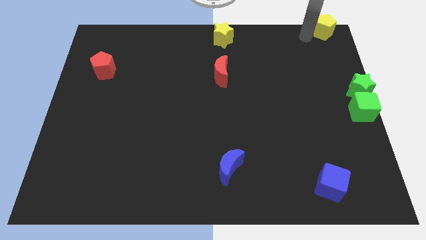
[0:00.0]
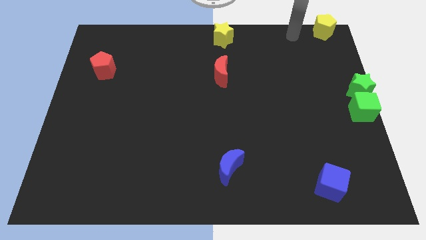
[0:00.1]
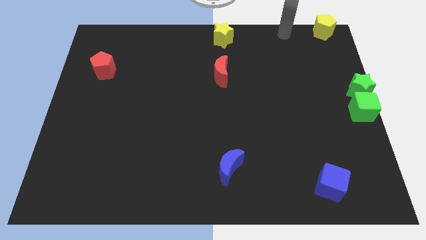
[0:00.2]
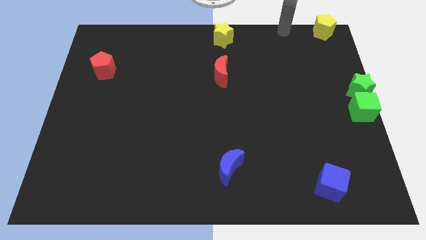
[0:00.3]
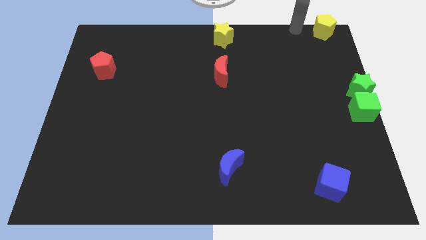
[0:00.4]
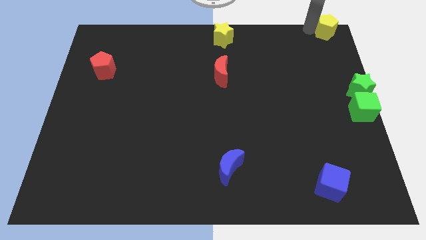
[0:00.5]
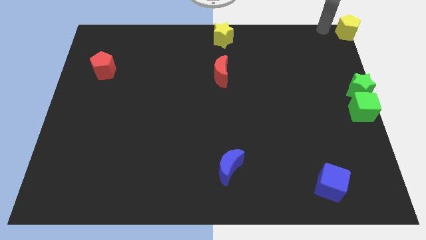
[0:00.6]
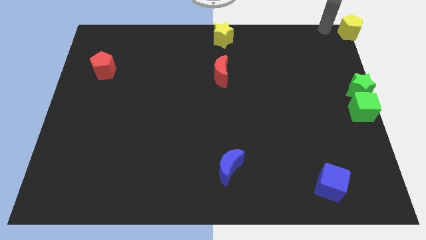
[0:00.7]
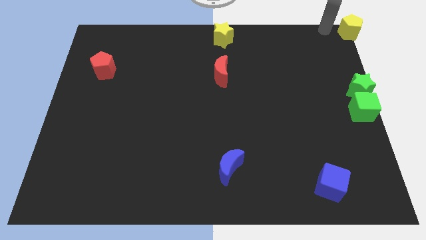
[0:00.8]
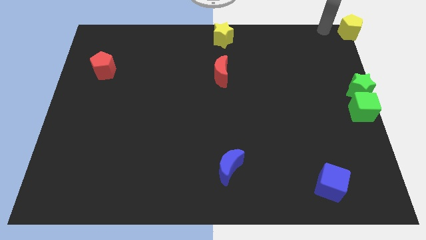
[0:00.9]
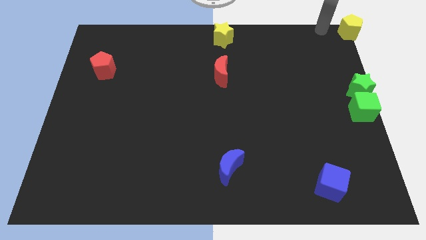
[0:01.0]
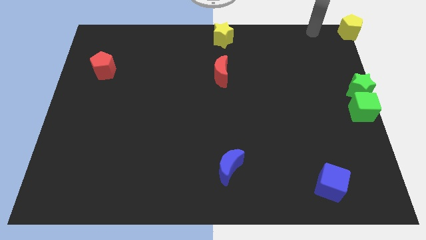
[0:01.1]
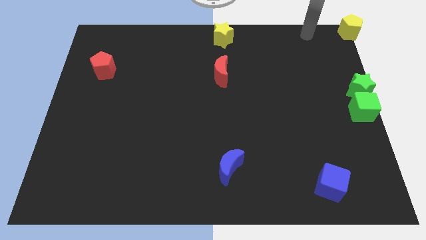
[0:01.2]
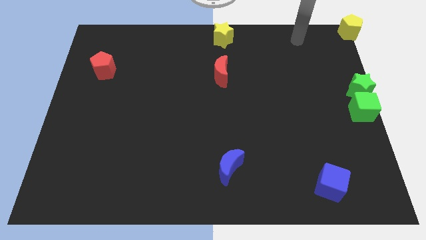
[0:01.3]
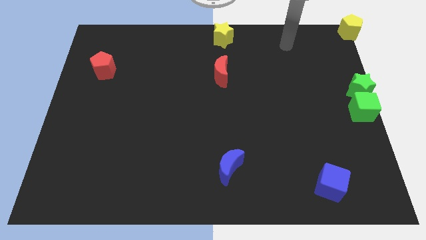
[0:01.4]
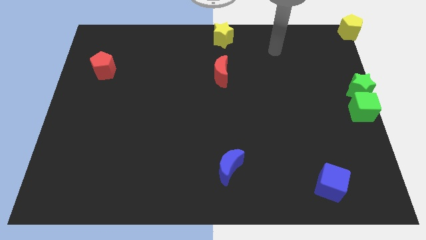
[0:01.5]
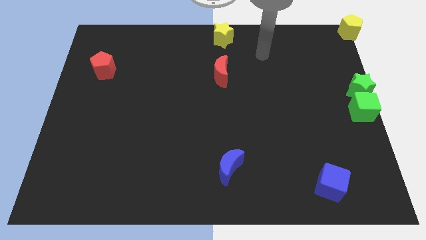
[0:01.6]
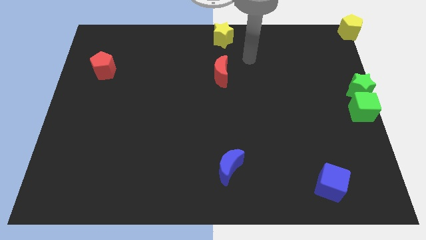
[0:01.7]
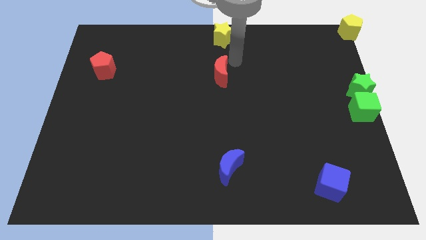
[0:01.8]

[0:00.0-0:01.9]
move yellow pentagon to the top right corner of board

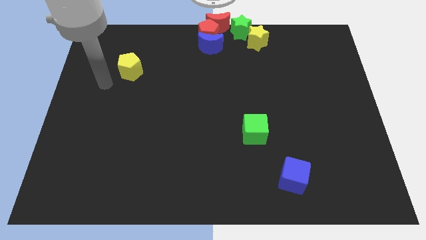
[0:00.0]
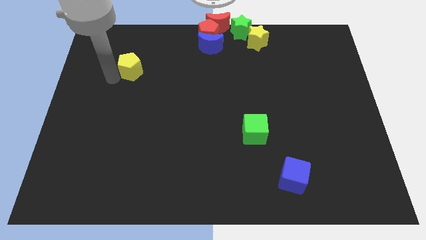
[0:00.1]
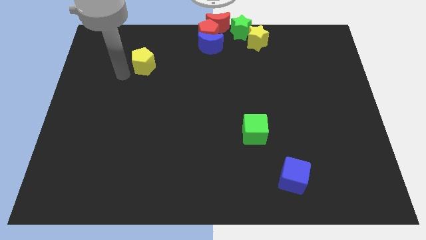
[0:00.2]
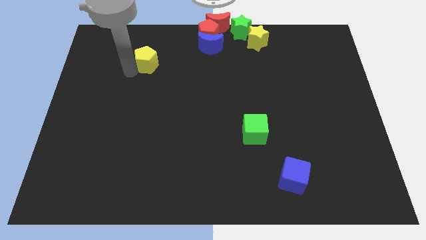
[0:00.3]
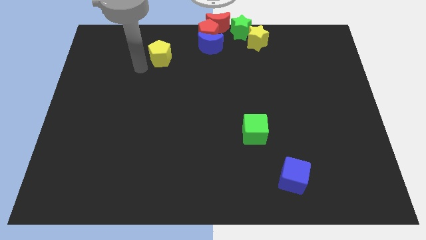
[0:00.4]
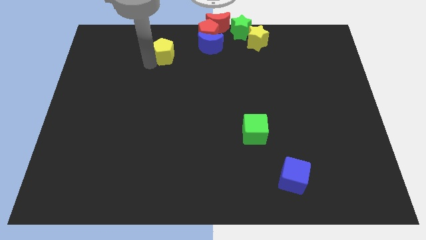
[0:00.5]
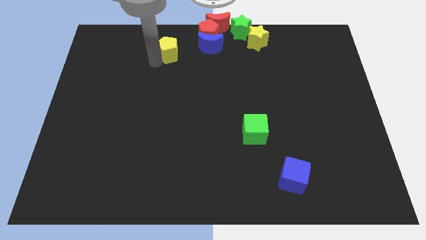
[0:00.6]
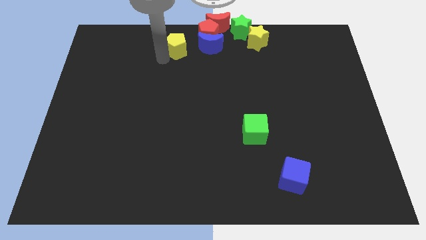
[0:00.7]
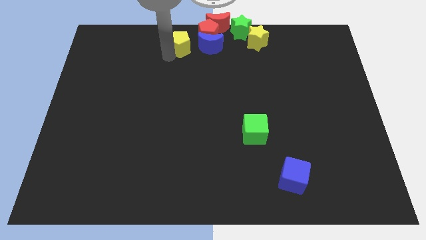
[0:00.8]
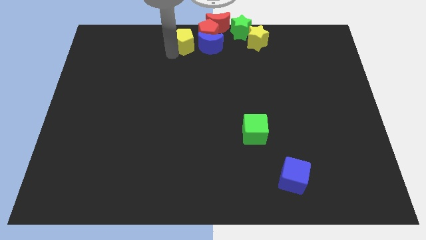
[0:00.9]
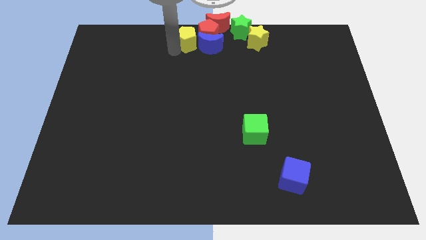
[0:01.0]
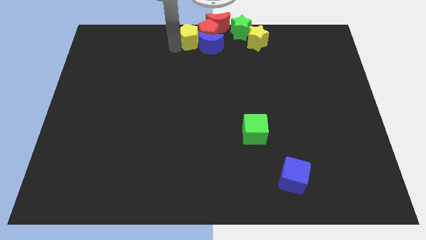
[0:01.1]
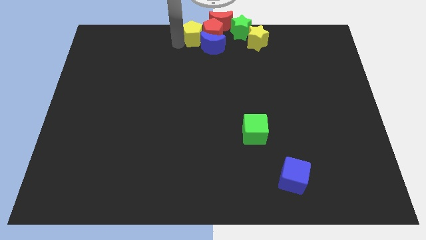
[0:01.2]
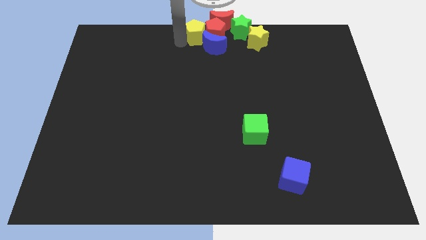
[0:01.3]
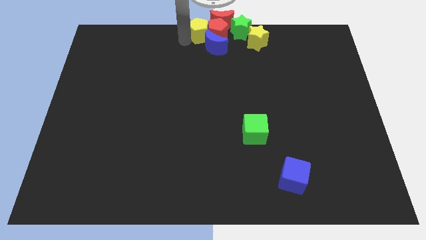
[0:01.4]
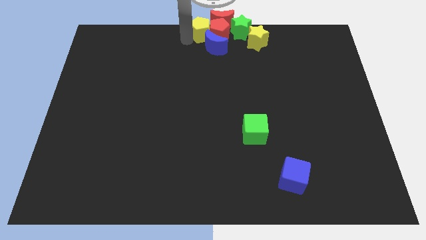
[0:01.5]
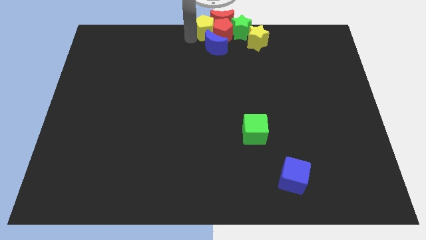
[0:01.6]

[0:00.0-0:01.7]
push the yellow pentagon into the red pentagon

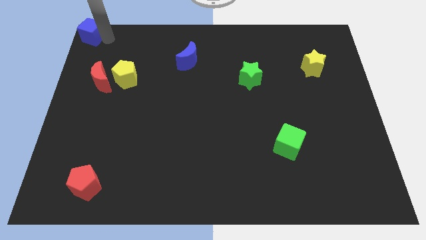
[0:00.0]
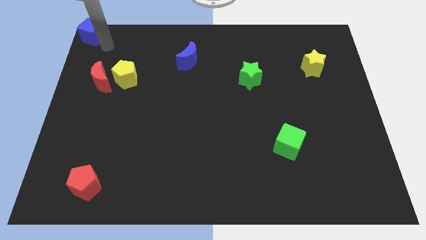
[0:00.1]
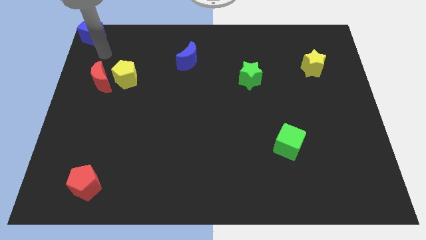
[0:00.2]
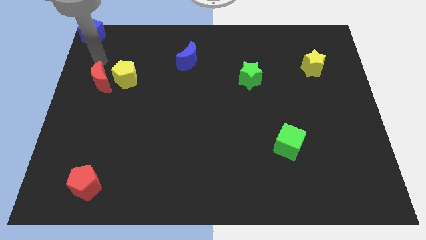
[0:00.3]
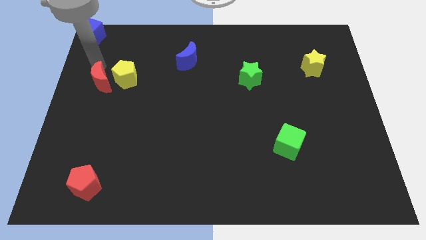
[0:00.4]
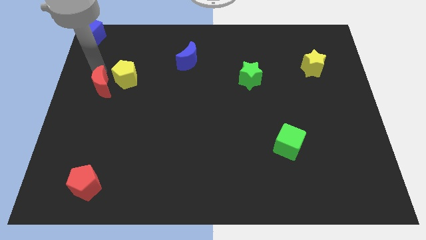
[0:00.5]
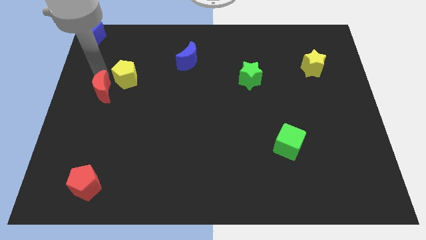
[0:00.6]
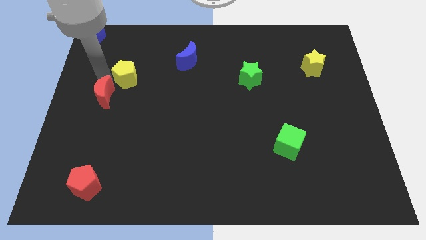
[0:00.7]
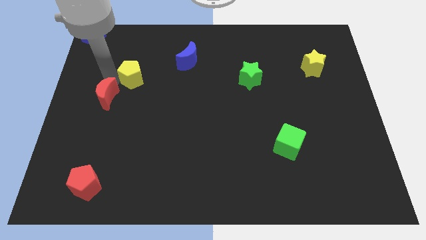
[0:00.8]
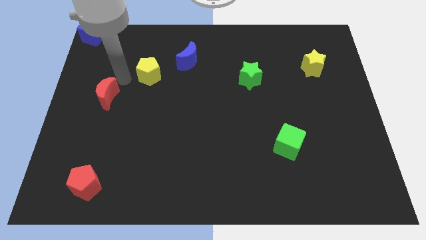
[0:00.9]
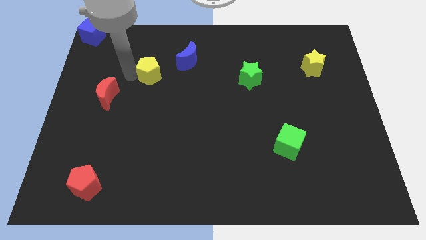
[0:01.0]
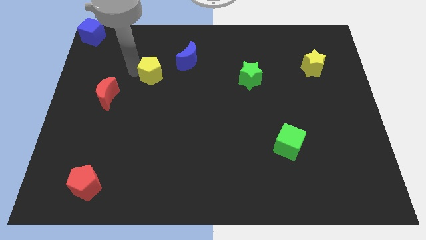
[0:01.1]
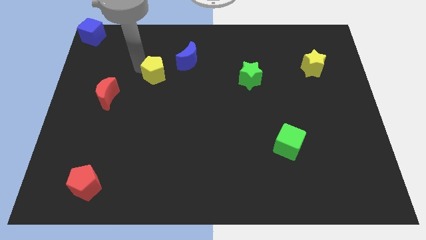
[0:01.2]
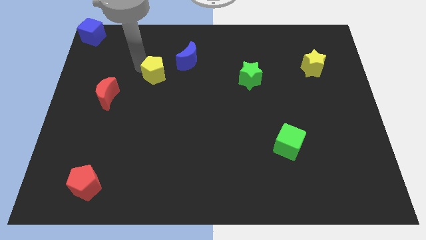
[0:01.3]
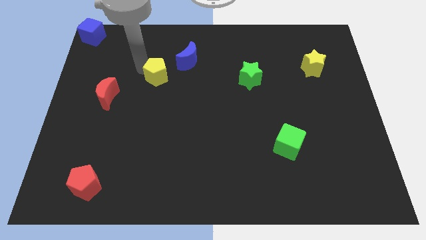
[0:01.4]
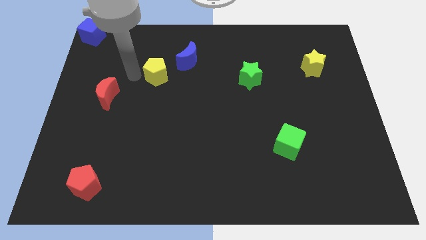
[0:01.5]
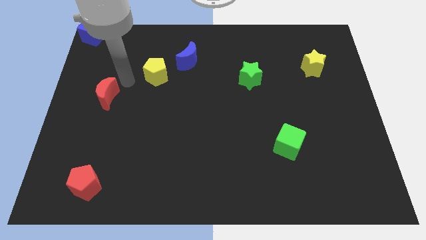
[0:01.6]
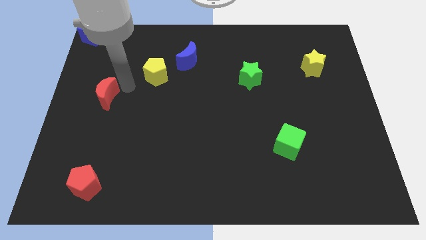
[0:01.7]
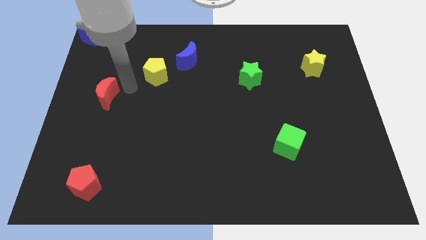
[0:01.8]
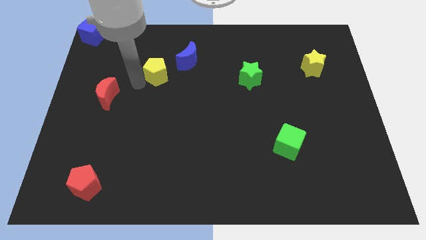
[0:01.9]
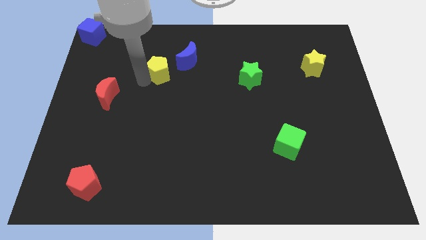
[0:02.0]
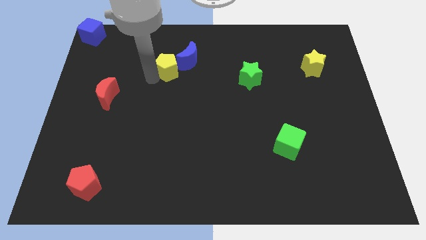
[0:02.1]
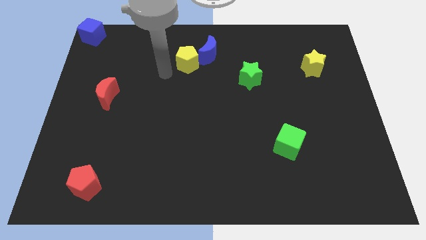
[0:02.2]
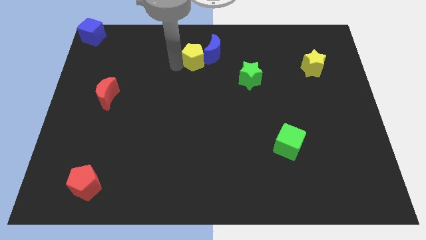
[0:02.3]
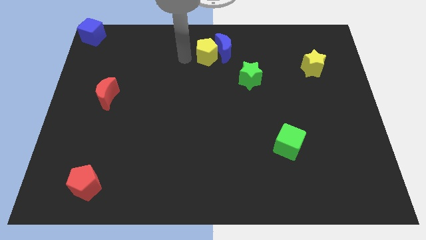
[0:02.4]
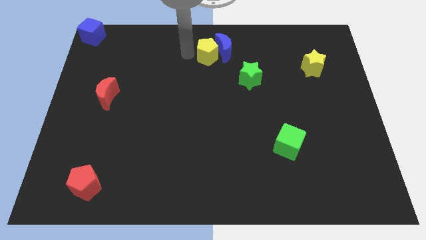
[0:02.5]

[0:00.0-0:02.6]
move yellow star into blue moon

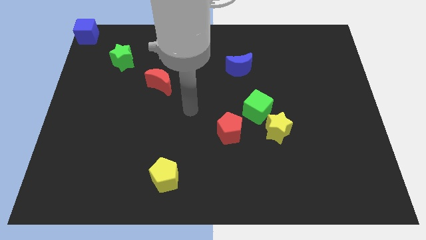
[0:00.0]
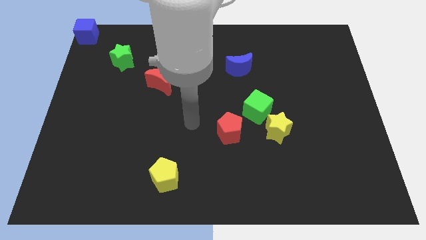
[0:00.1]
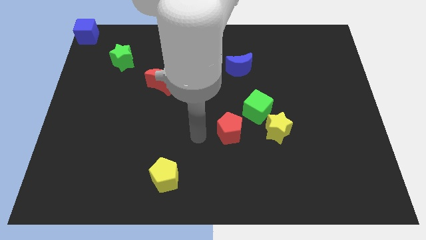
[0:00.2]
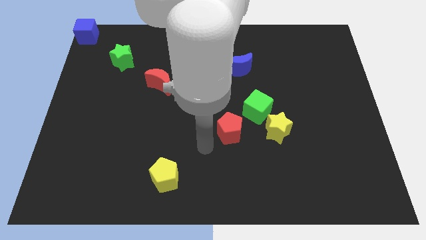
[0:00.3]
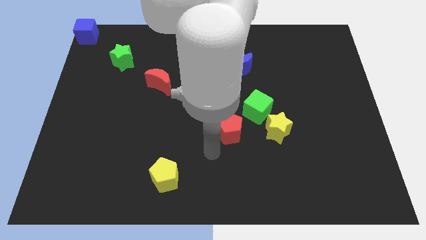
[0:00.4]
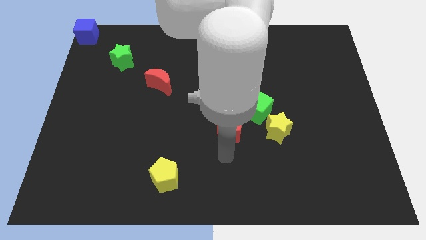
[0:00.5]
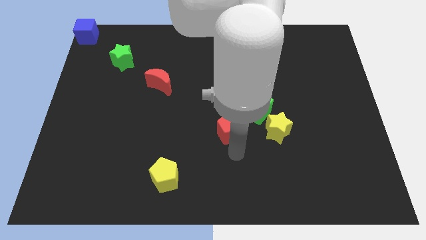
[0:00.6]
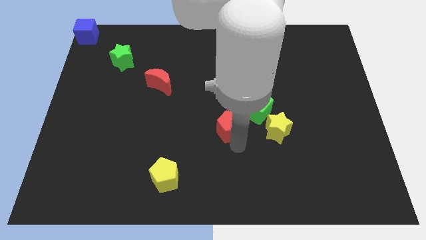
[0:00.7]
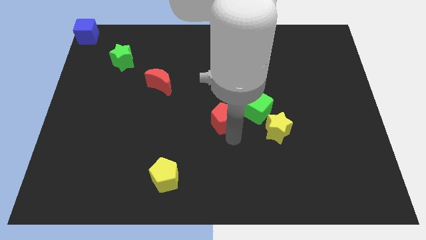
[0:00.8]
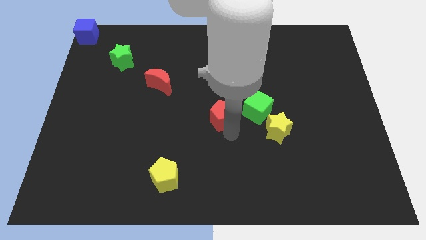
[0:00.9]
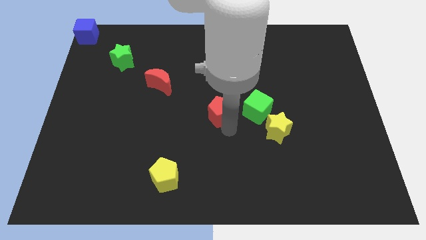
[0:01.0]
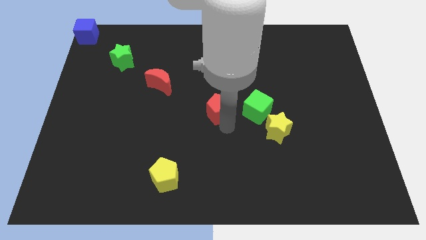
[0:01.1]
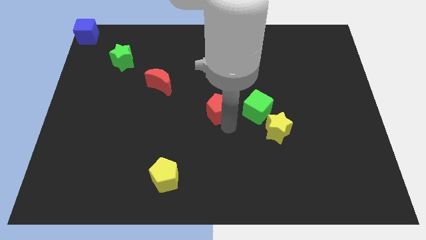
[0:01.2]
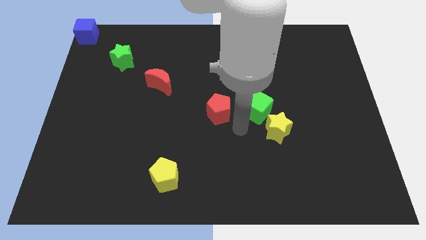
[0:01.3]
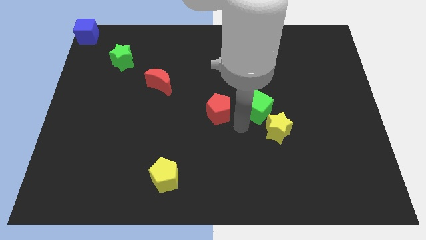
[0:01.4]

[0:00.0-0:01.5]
push the red pentagon slightly to the top of the board

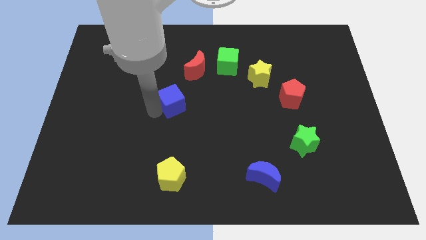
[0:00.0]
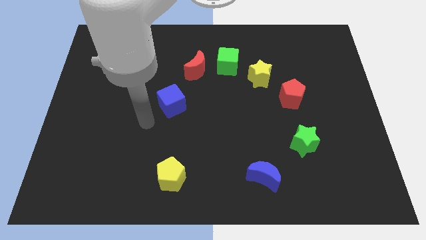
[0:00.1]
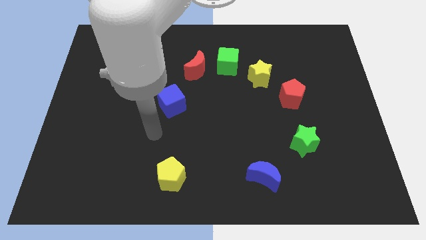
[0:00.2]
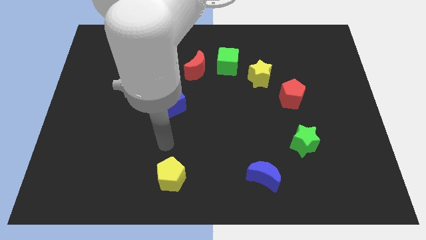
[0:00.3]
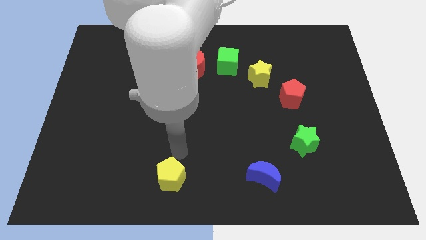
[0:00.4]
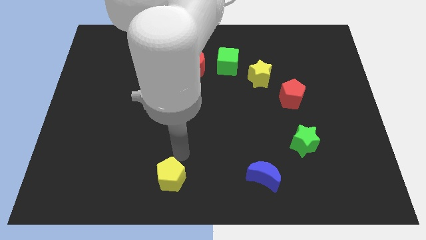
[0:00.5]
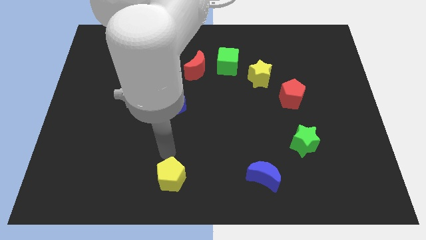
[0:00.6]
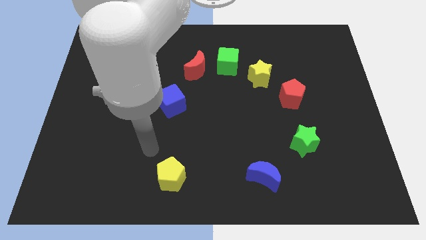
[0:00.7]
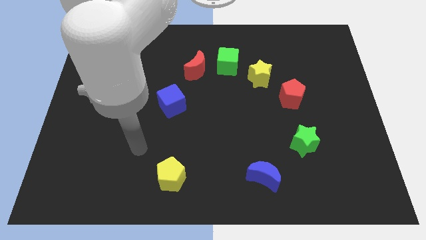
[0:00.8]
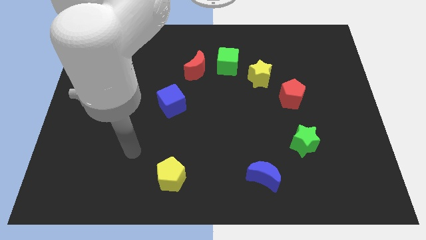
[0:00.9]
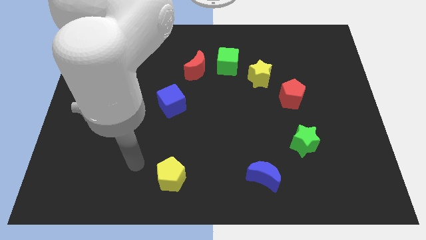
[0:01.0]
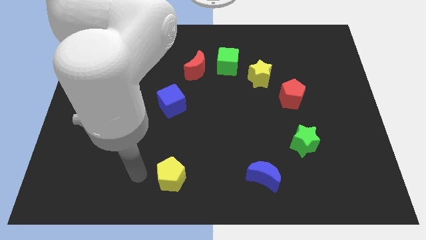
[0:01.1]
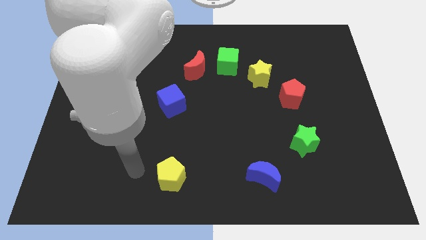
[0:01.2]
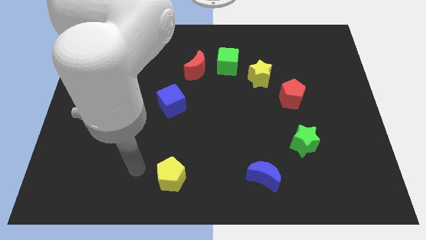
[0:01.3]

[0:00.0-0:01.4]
move your arm away from the blue cube
